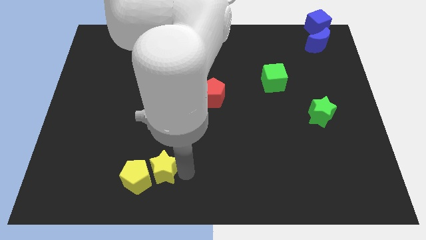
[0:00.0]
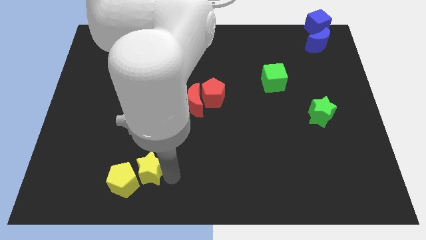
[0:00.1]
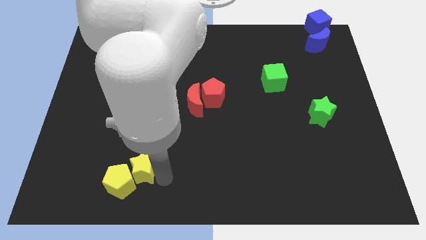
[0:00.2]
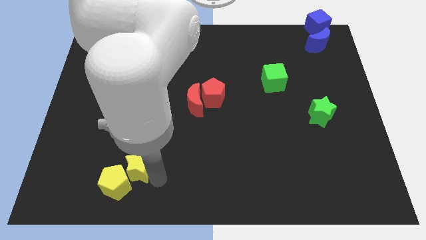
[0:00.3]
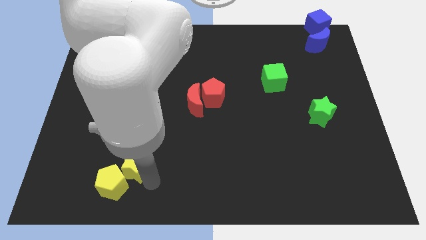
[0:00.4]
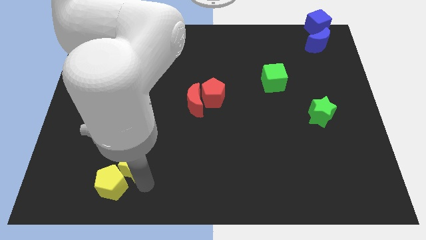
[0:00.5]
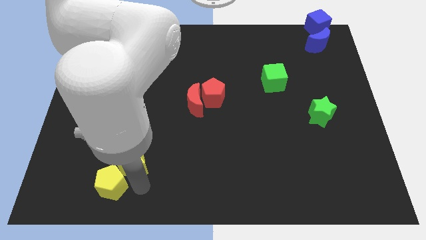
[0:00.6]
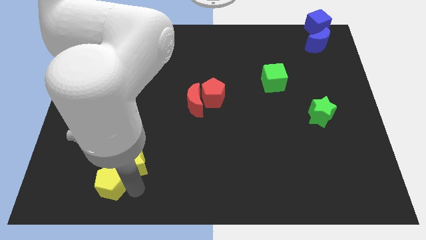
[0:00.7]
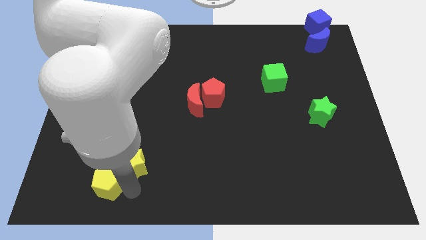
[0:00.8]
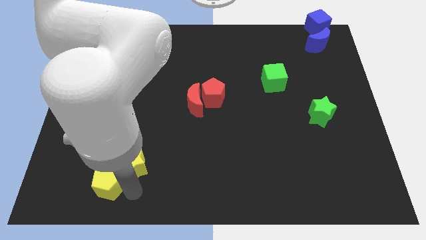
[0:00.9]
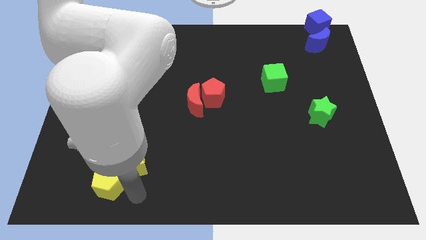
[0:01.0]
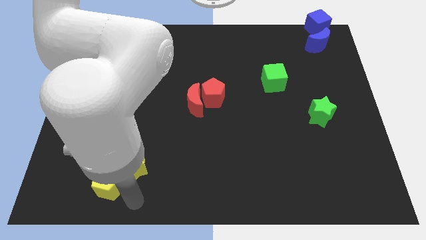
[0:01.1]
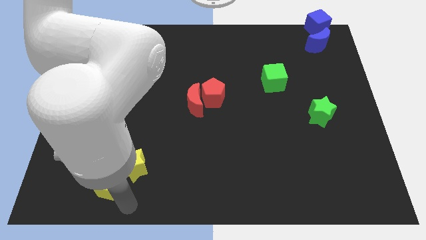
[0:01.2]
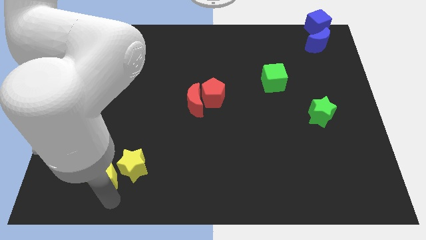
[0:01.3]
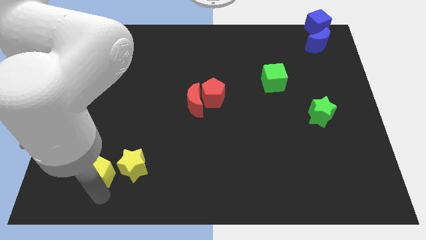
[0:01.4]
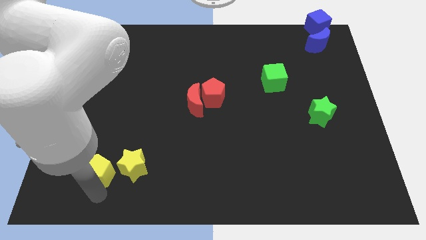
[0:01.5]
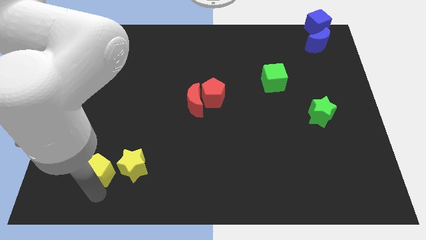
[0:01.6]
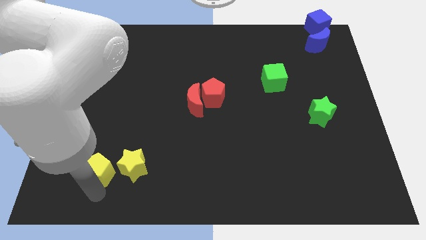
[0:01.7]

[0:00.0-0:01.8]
move the yellow blocks to the left of the board

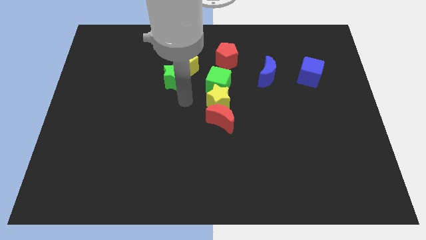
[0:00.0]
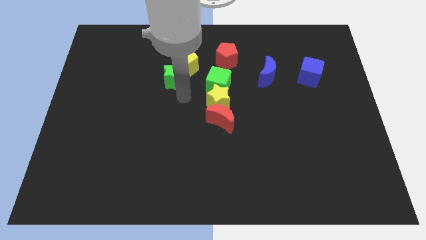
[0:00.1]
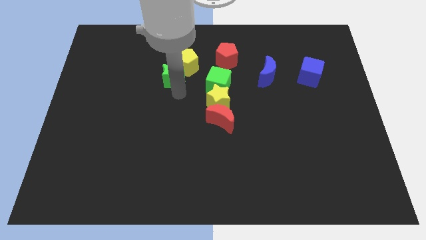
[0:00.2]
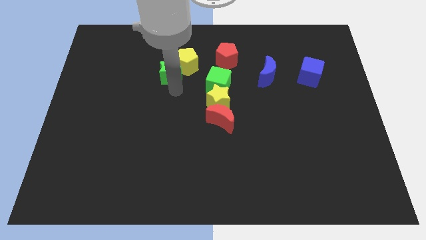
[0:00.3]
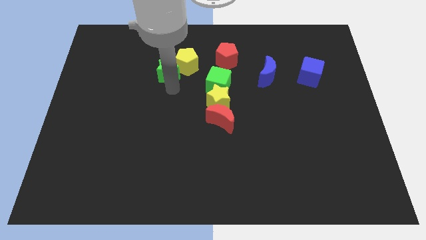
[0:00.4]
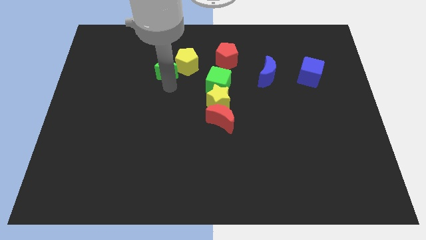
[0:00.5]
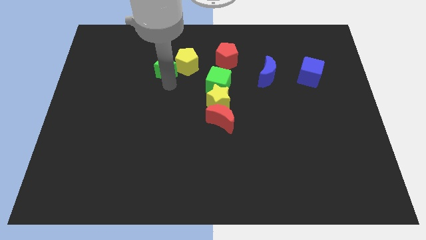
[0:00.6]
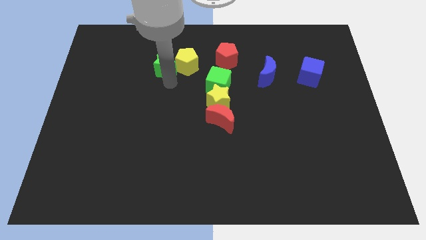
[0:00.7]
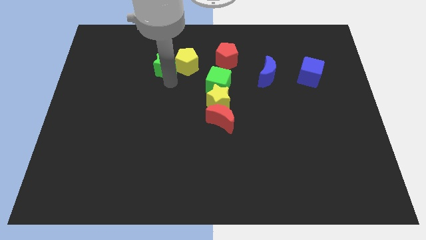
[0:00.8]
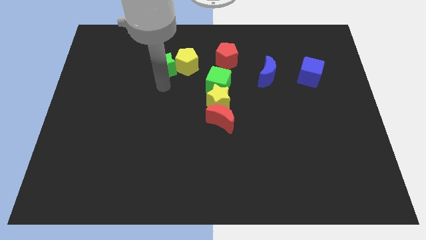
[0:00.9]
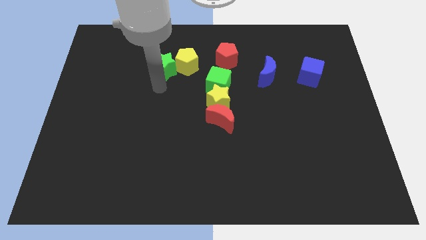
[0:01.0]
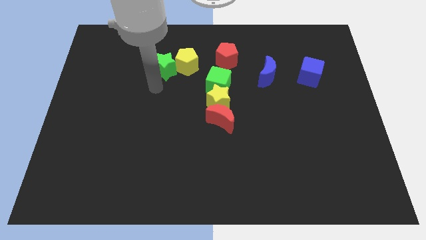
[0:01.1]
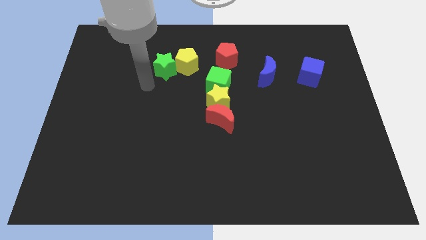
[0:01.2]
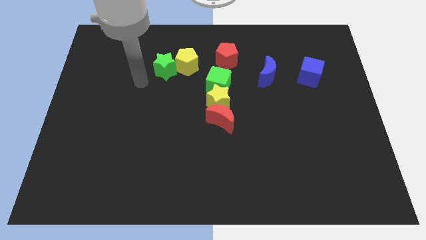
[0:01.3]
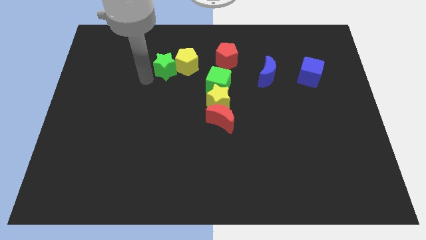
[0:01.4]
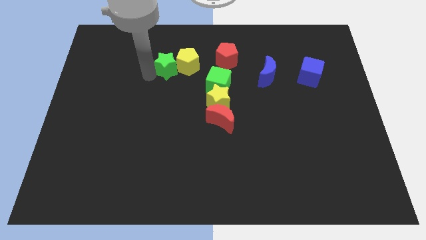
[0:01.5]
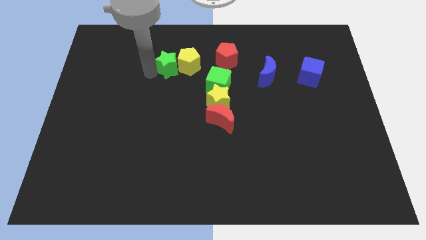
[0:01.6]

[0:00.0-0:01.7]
place green star to the left of the yellow pentagon

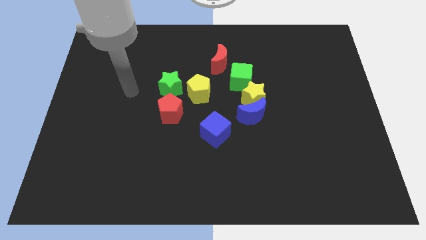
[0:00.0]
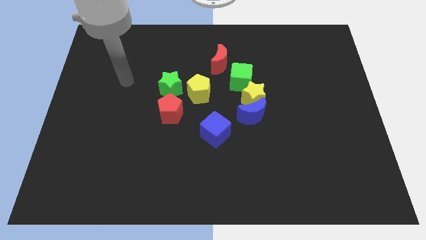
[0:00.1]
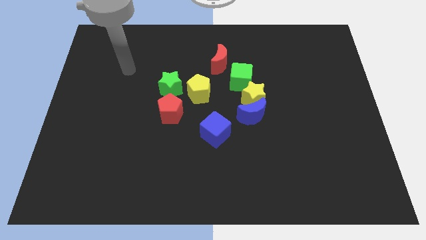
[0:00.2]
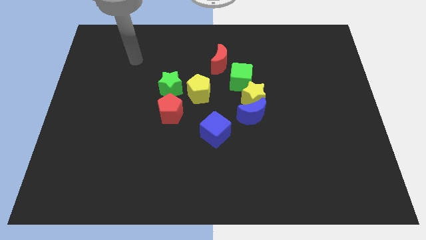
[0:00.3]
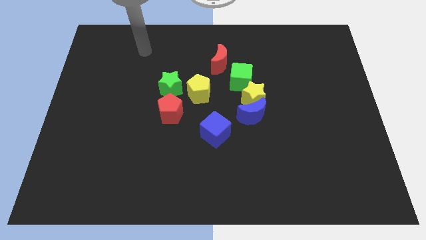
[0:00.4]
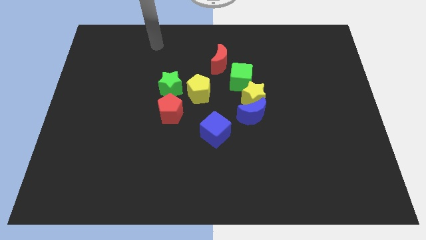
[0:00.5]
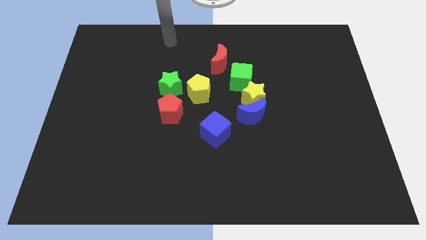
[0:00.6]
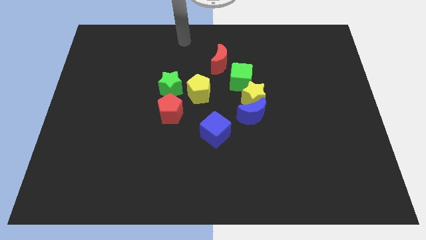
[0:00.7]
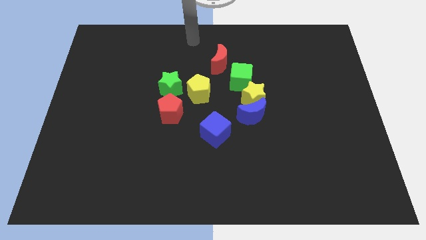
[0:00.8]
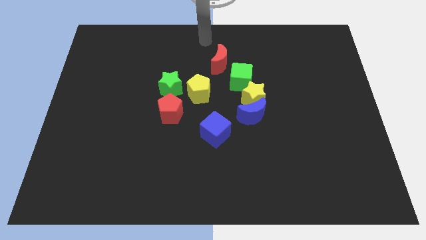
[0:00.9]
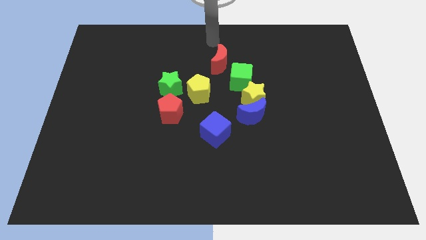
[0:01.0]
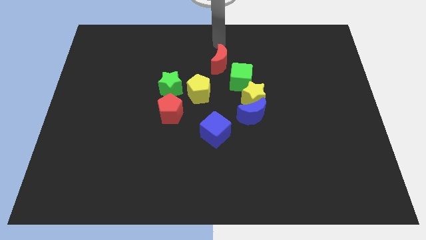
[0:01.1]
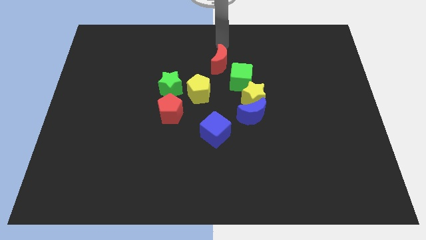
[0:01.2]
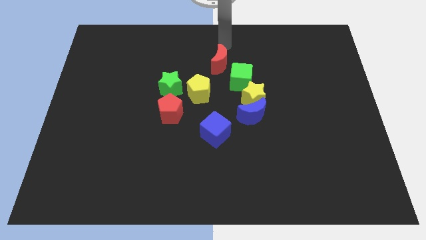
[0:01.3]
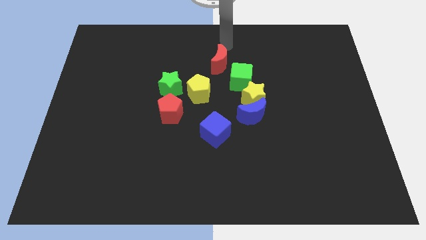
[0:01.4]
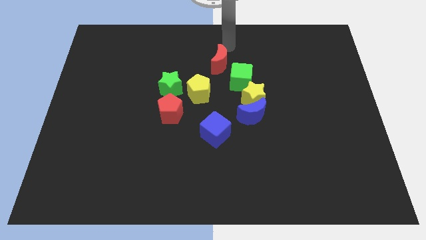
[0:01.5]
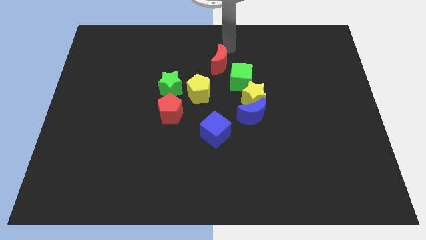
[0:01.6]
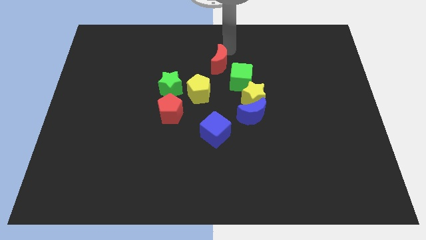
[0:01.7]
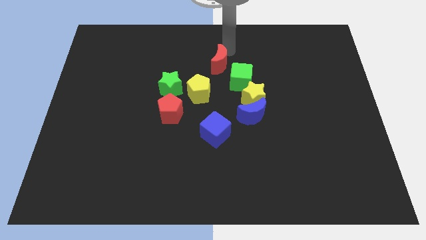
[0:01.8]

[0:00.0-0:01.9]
point your arm at the top side of the red crescent

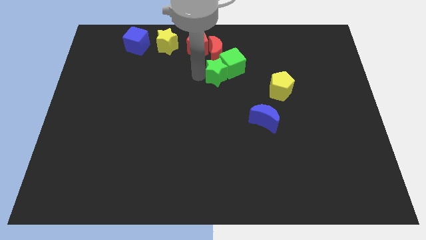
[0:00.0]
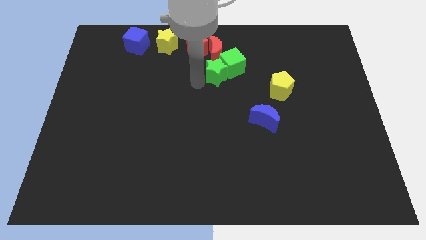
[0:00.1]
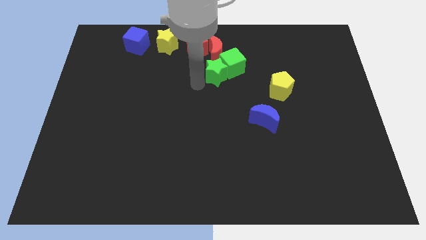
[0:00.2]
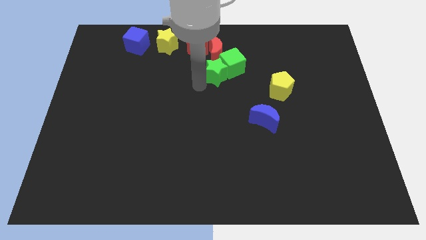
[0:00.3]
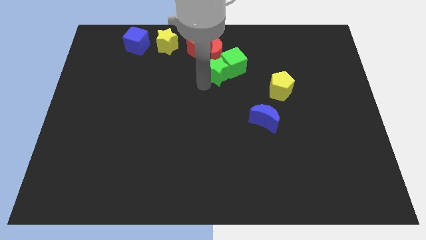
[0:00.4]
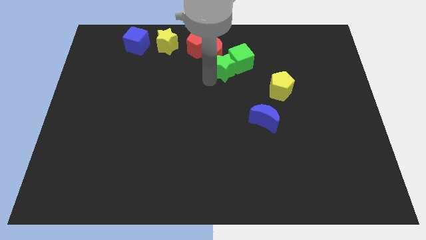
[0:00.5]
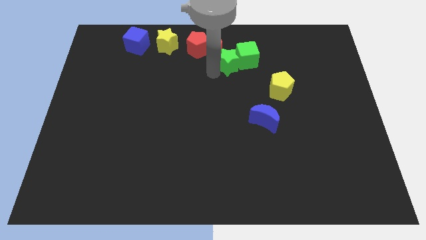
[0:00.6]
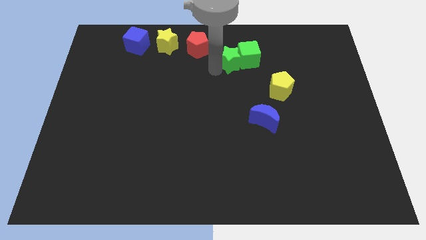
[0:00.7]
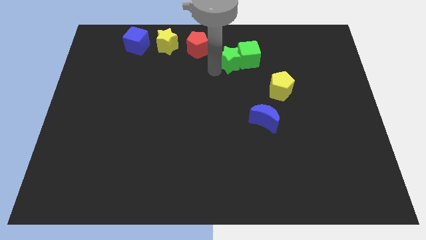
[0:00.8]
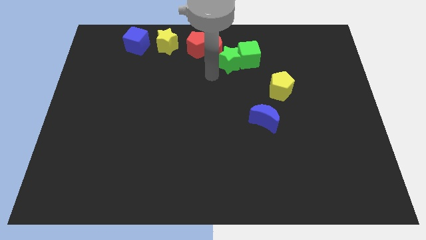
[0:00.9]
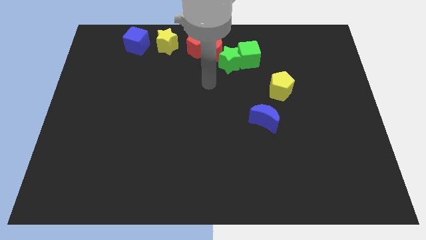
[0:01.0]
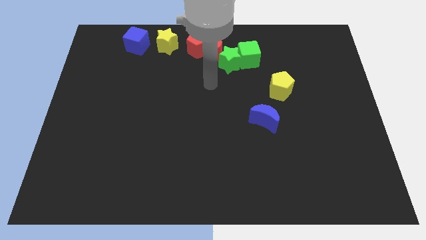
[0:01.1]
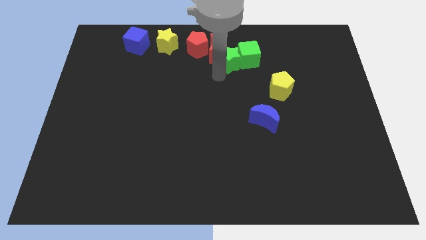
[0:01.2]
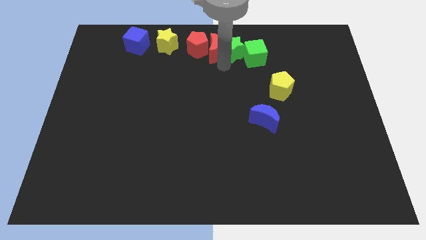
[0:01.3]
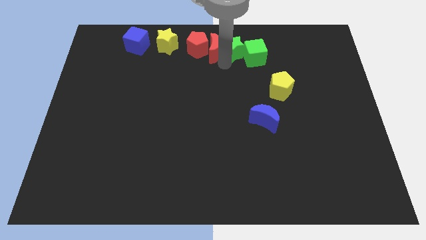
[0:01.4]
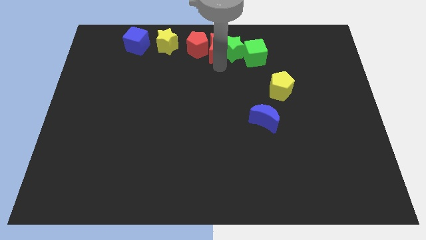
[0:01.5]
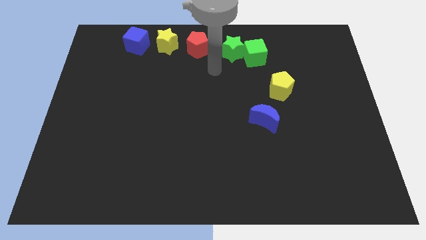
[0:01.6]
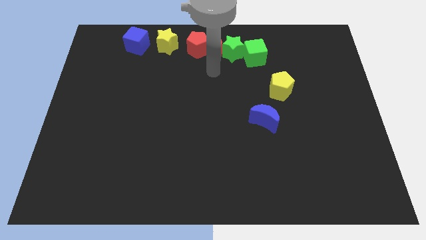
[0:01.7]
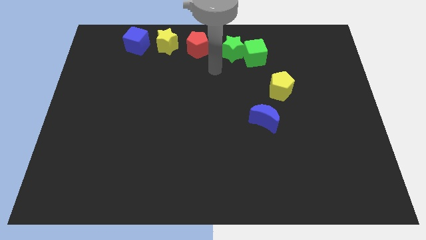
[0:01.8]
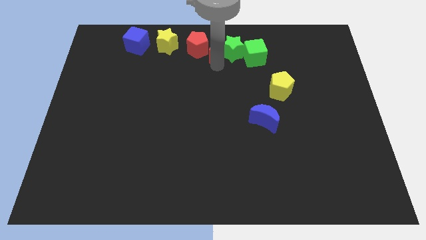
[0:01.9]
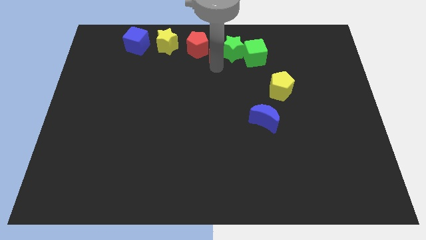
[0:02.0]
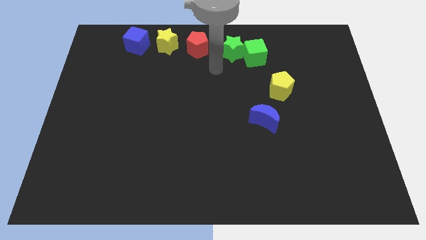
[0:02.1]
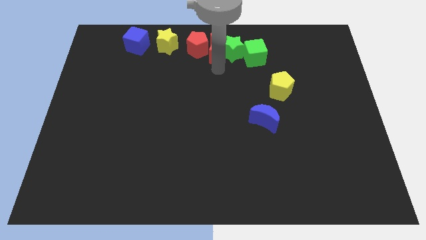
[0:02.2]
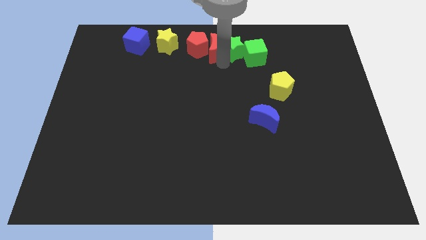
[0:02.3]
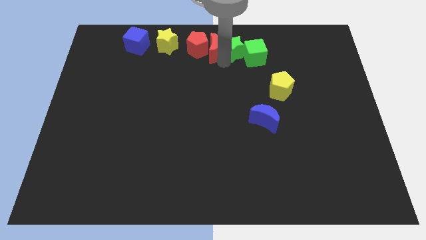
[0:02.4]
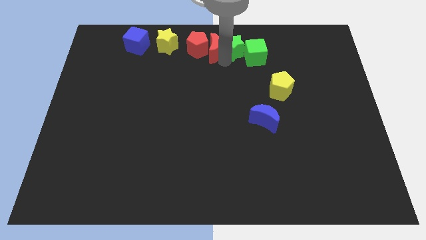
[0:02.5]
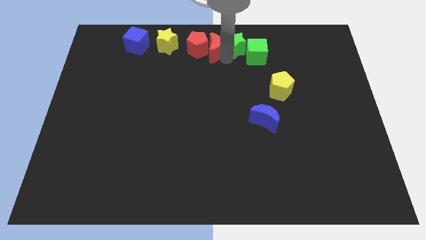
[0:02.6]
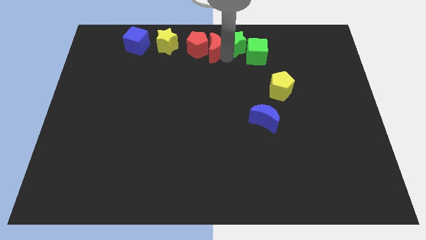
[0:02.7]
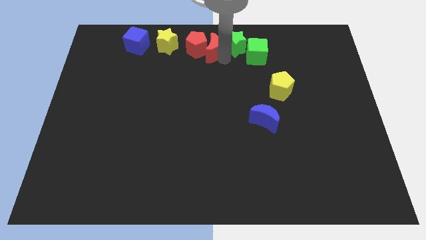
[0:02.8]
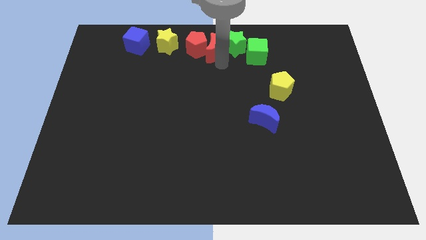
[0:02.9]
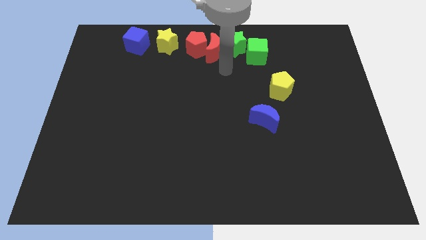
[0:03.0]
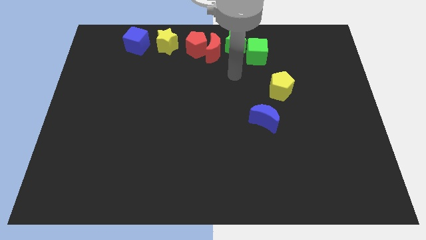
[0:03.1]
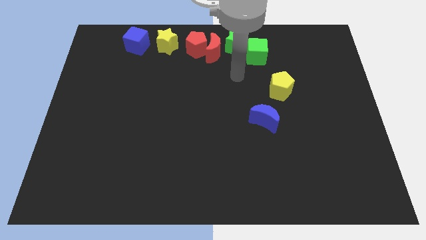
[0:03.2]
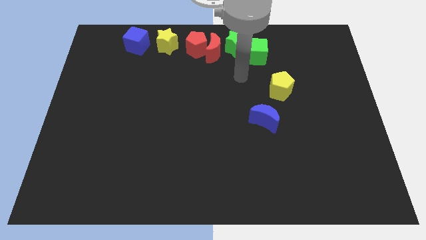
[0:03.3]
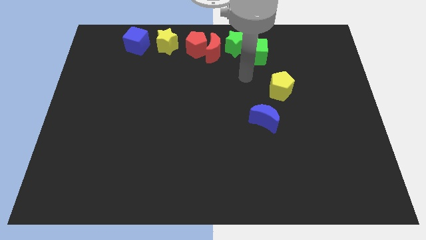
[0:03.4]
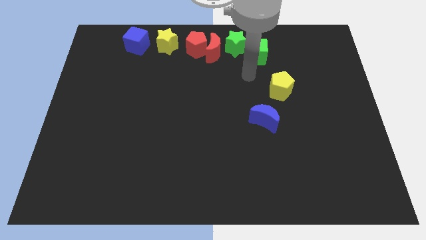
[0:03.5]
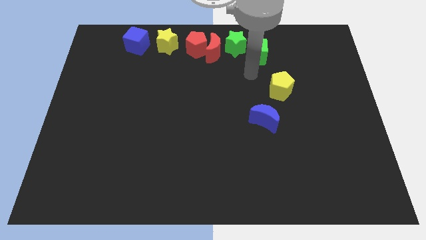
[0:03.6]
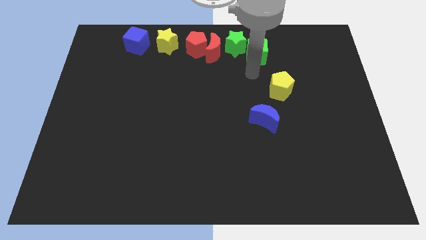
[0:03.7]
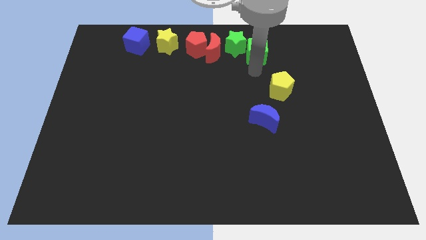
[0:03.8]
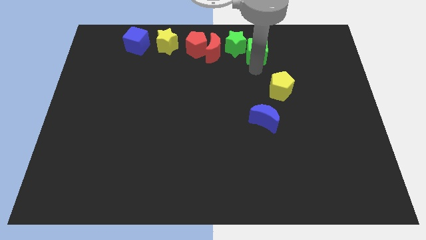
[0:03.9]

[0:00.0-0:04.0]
move the green blocks to the right of the red moon
